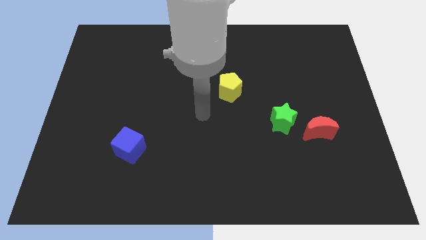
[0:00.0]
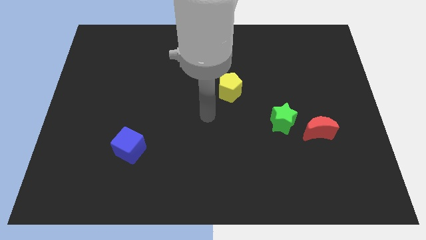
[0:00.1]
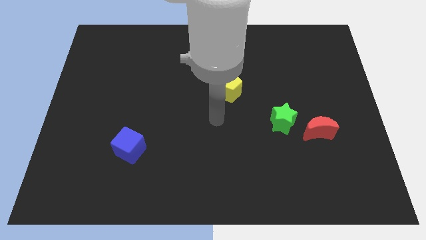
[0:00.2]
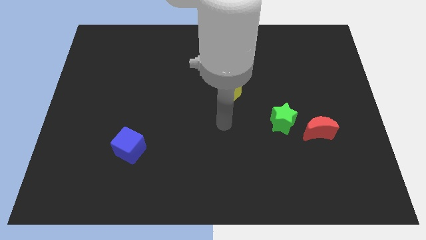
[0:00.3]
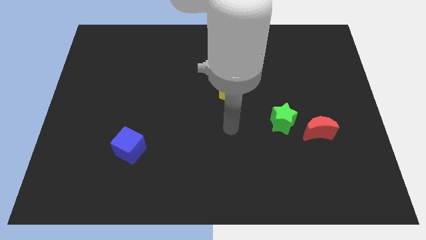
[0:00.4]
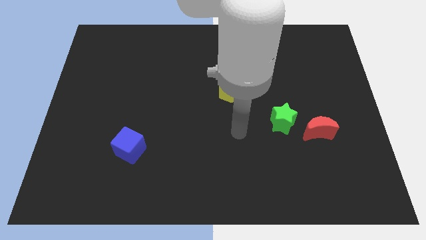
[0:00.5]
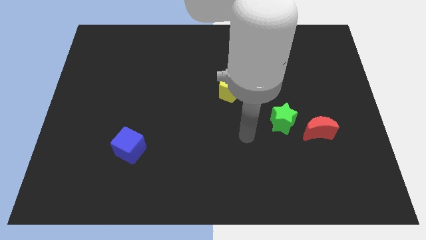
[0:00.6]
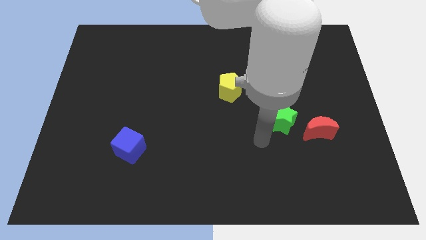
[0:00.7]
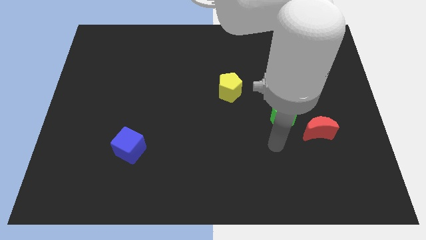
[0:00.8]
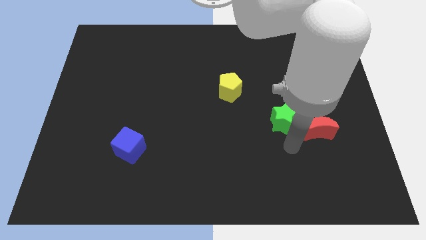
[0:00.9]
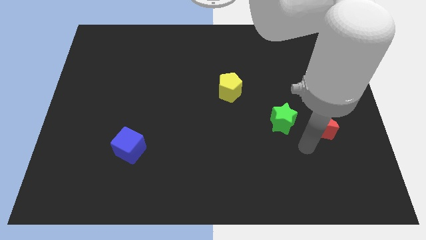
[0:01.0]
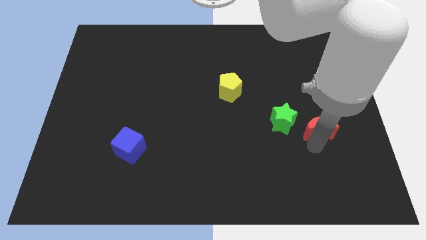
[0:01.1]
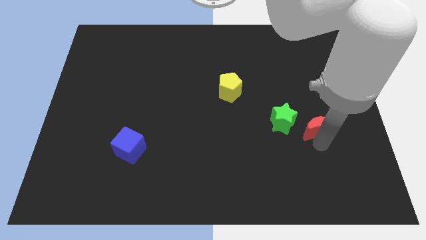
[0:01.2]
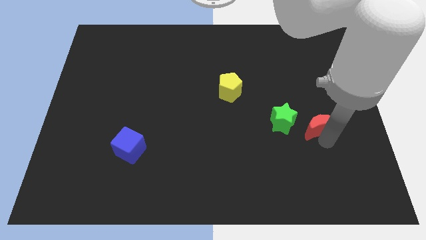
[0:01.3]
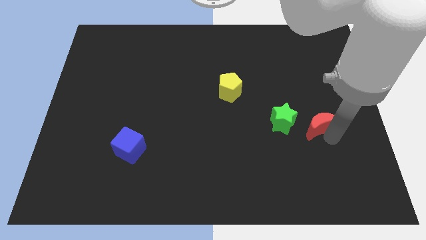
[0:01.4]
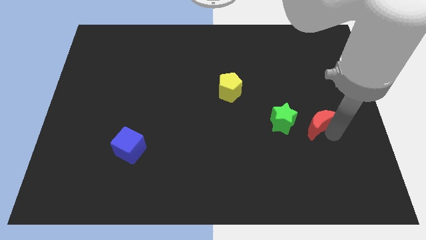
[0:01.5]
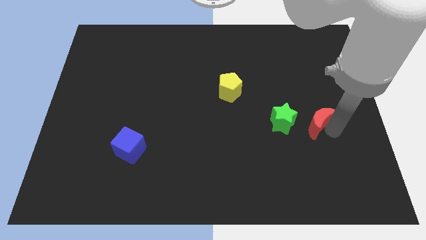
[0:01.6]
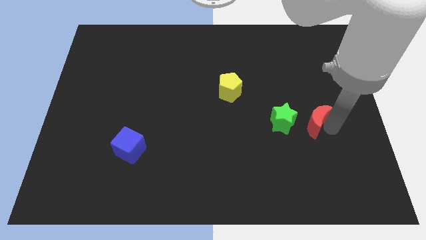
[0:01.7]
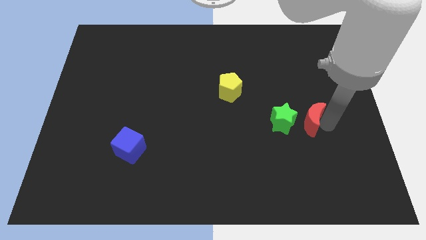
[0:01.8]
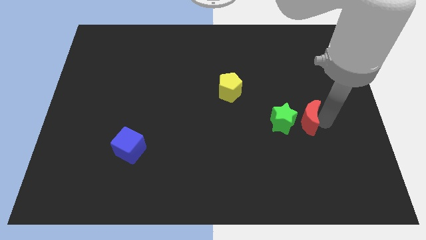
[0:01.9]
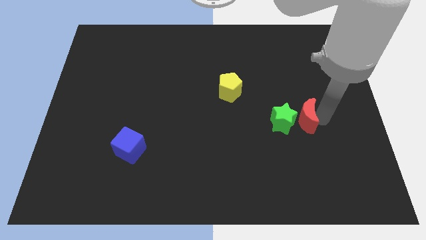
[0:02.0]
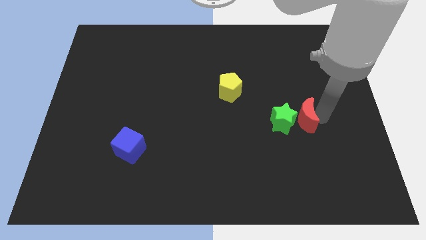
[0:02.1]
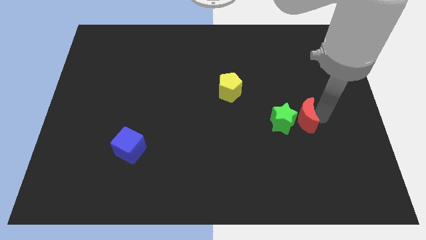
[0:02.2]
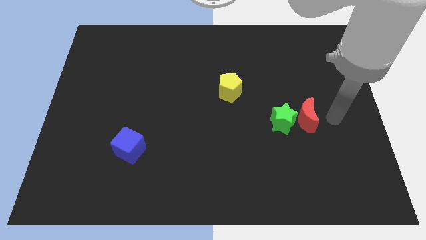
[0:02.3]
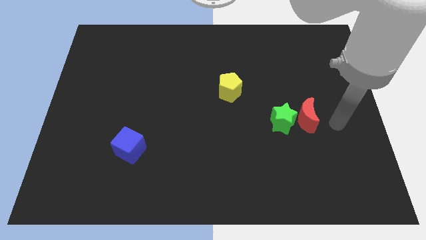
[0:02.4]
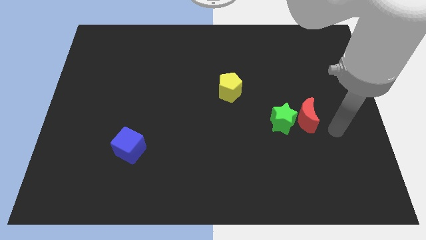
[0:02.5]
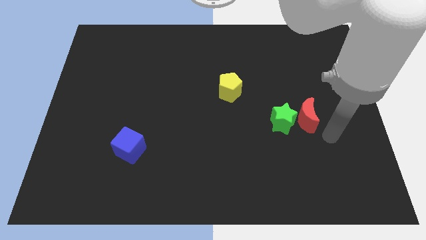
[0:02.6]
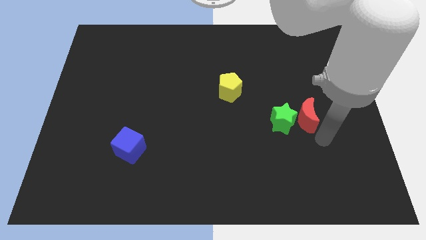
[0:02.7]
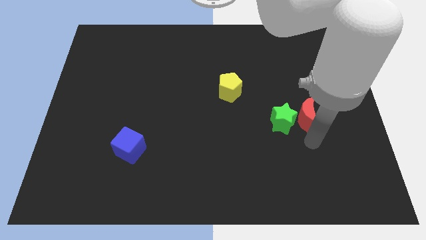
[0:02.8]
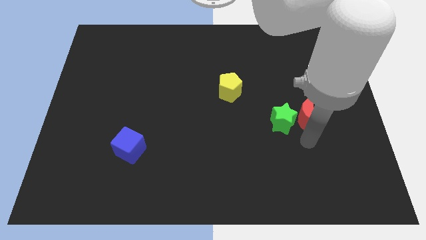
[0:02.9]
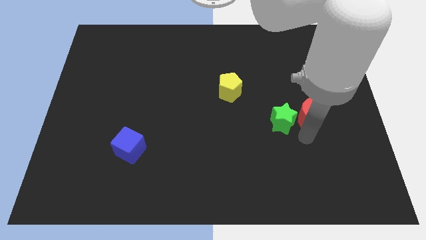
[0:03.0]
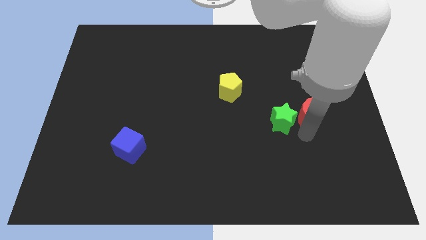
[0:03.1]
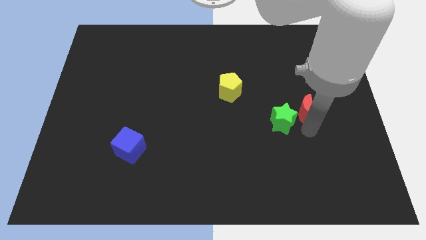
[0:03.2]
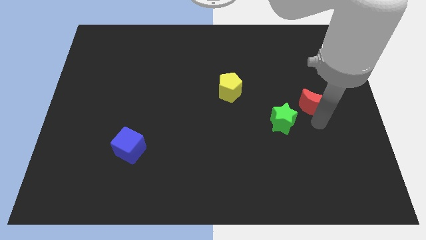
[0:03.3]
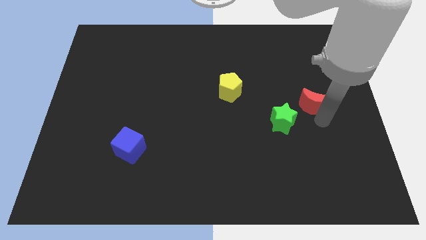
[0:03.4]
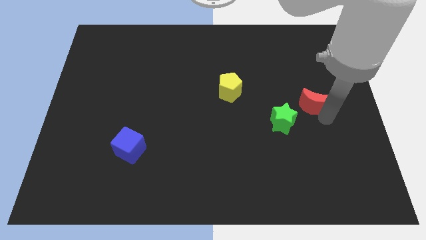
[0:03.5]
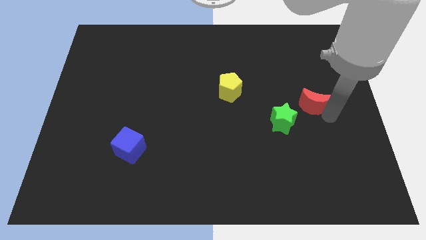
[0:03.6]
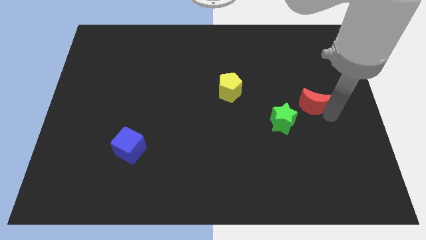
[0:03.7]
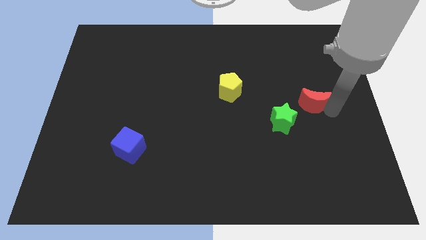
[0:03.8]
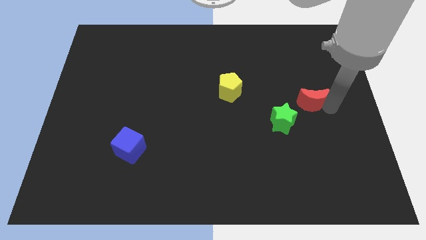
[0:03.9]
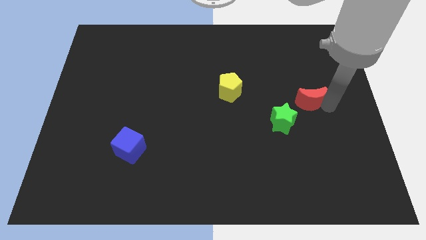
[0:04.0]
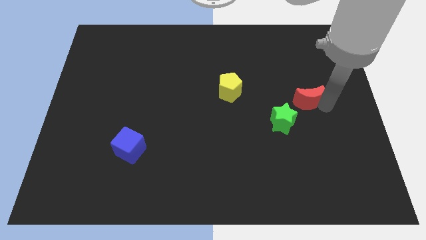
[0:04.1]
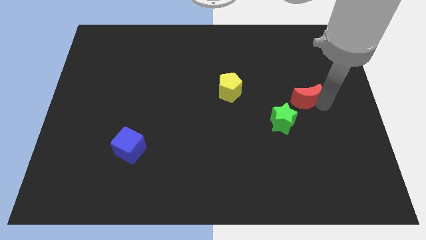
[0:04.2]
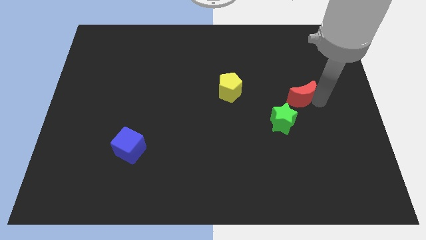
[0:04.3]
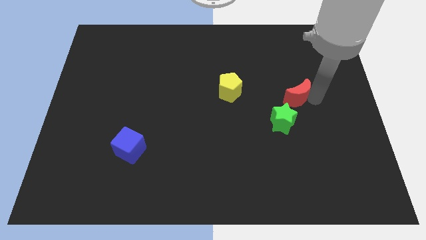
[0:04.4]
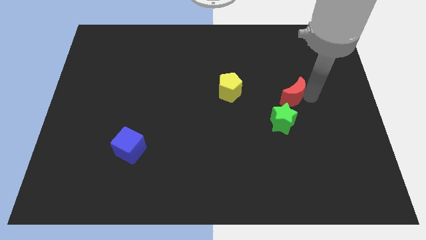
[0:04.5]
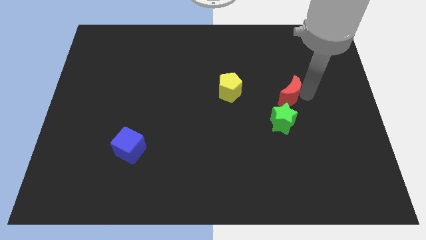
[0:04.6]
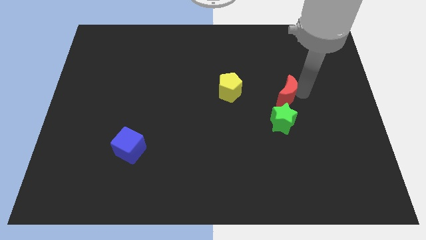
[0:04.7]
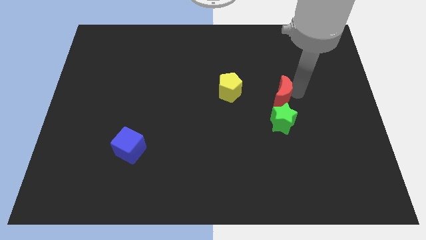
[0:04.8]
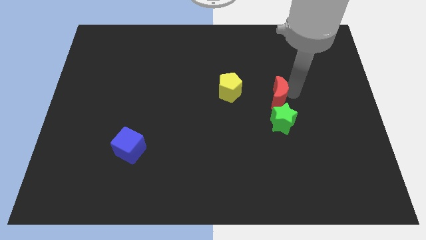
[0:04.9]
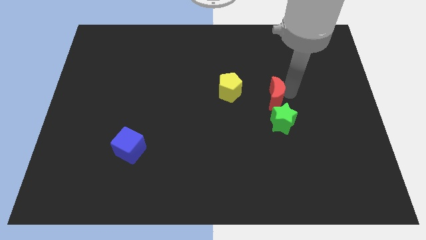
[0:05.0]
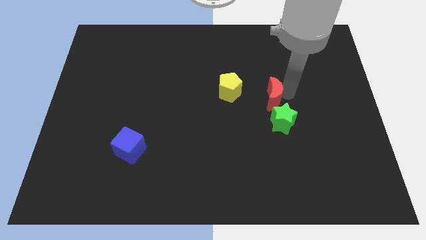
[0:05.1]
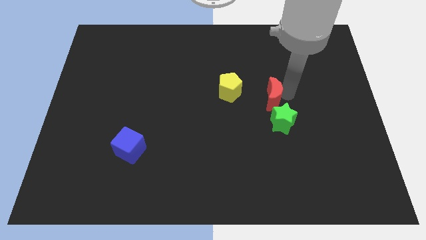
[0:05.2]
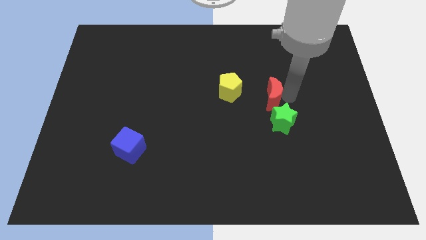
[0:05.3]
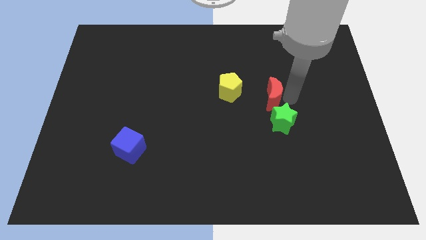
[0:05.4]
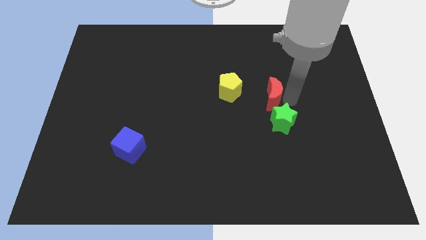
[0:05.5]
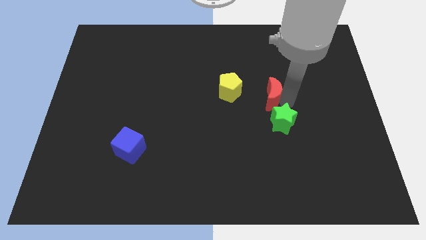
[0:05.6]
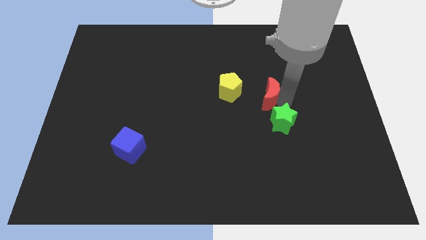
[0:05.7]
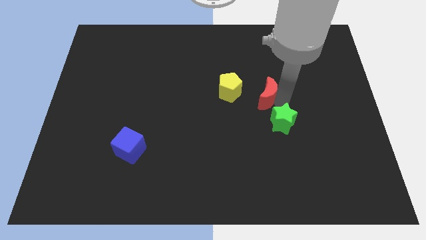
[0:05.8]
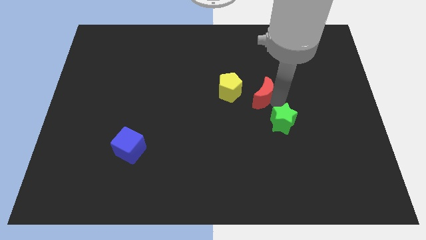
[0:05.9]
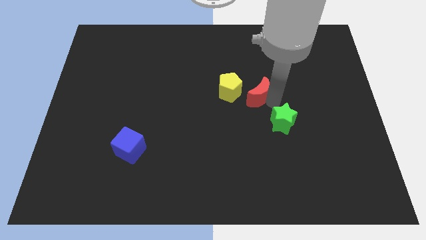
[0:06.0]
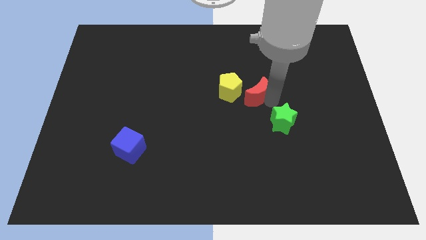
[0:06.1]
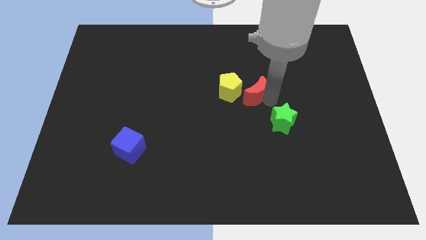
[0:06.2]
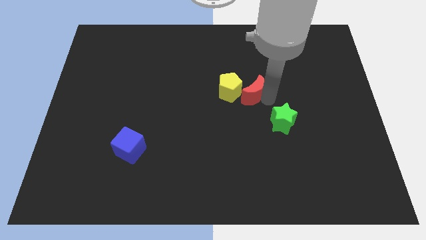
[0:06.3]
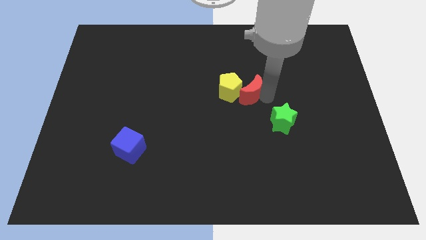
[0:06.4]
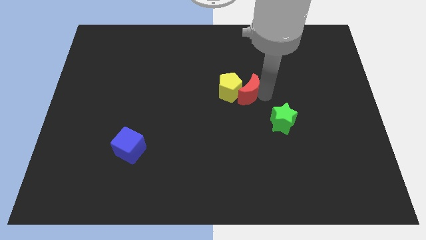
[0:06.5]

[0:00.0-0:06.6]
move the red moon close to the yellow block

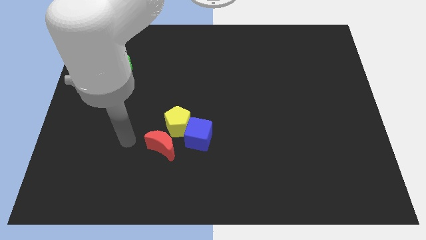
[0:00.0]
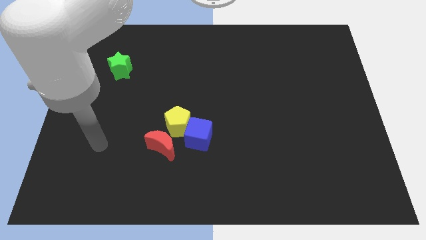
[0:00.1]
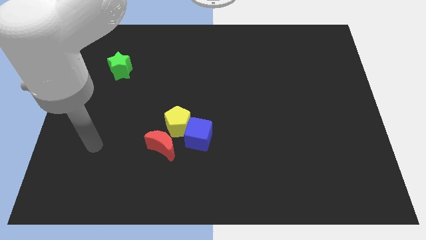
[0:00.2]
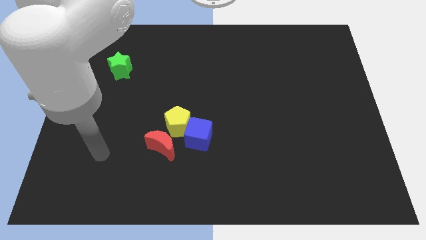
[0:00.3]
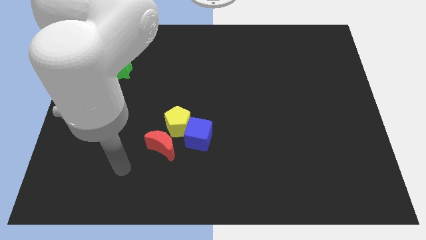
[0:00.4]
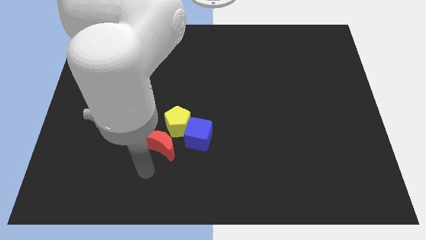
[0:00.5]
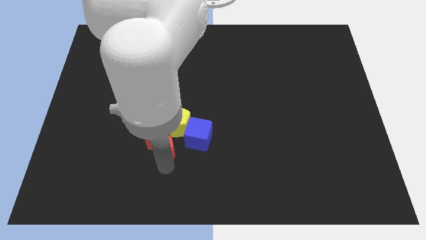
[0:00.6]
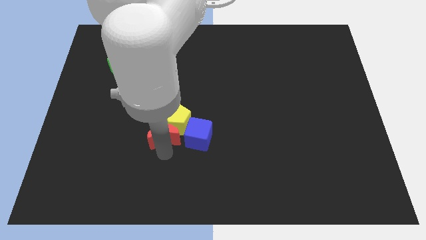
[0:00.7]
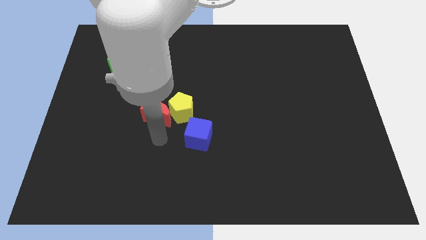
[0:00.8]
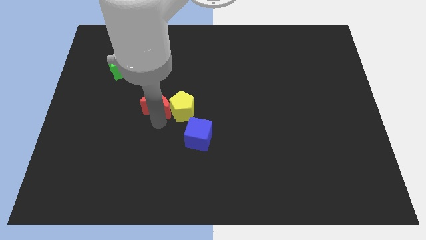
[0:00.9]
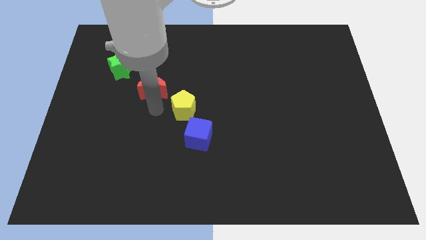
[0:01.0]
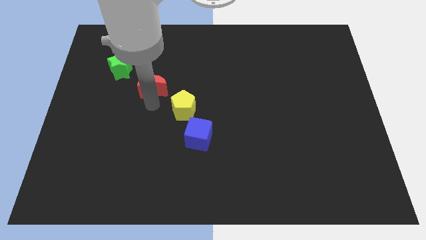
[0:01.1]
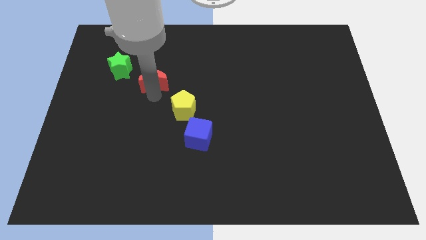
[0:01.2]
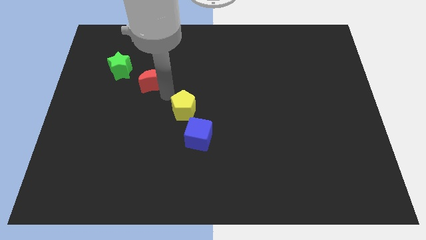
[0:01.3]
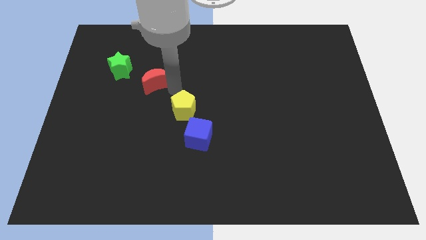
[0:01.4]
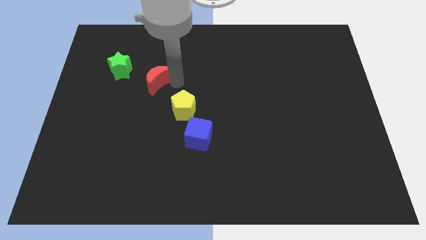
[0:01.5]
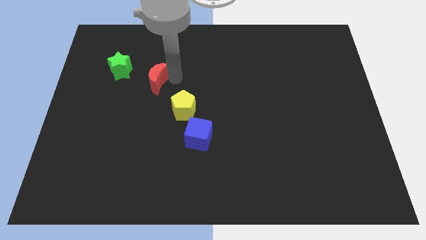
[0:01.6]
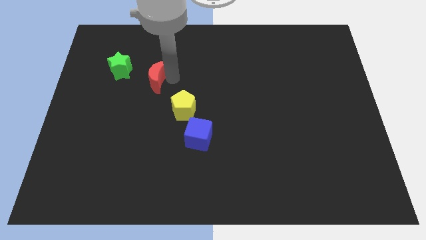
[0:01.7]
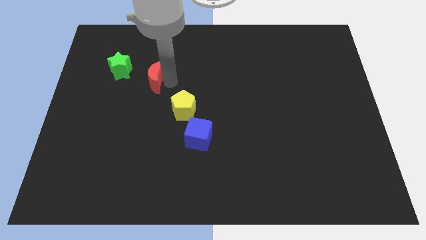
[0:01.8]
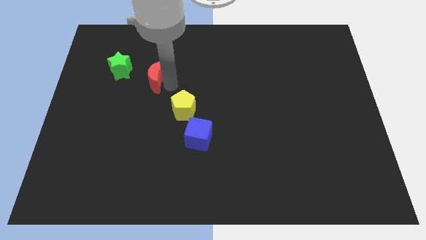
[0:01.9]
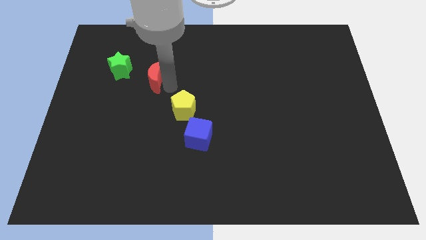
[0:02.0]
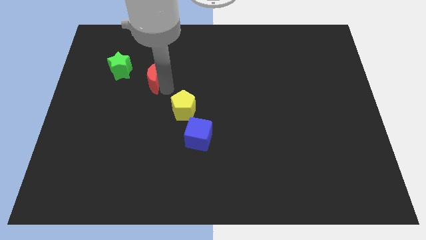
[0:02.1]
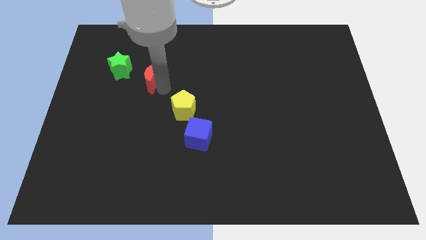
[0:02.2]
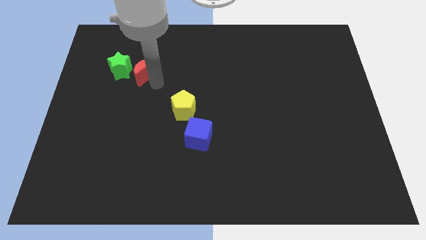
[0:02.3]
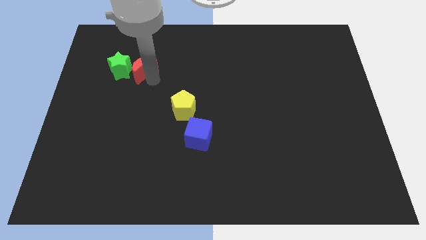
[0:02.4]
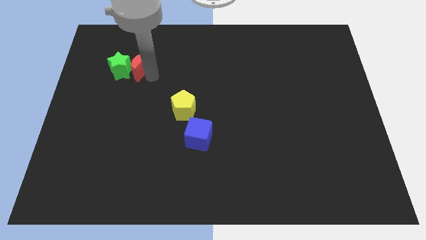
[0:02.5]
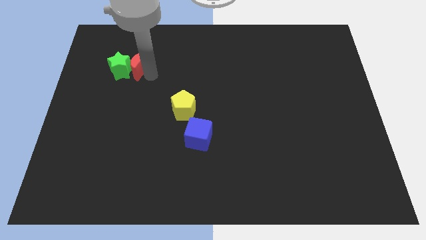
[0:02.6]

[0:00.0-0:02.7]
push the moon towards the green star
